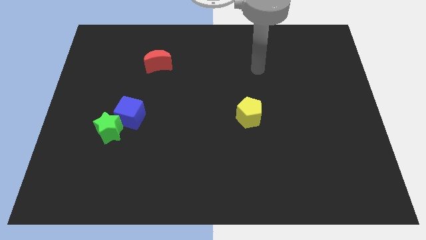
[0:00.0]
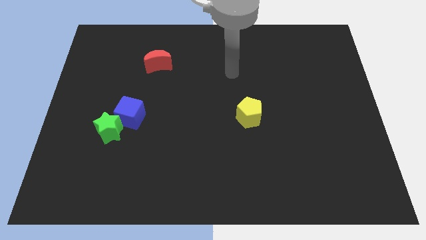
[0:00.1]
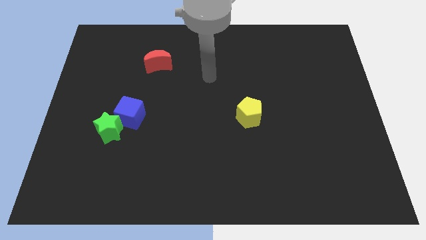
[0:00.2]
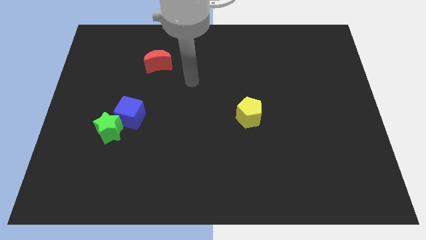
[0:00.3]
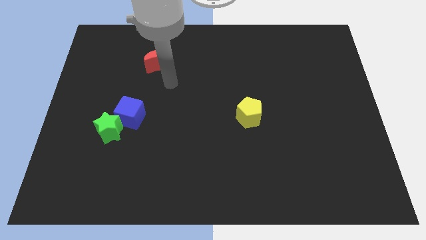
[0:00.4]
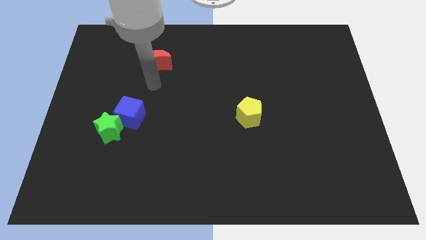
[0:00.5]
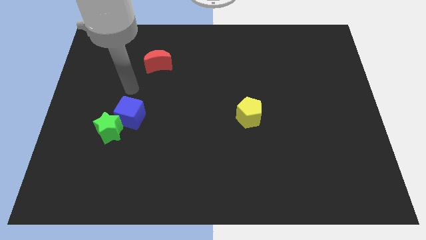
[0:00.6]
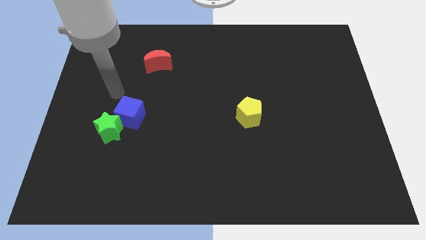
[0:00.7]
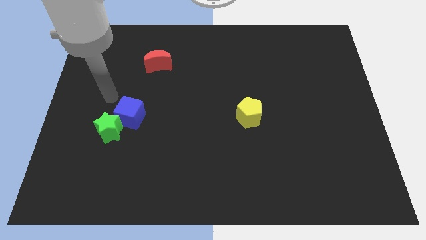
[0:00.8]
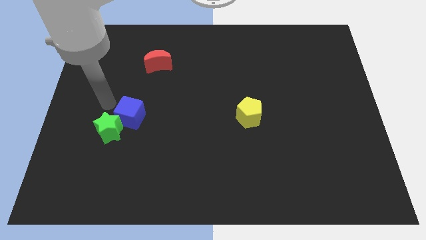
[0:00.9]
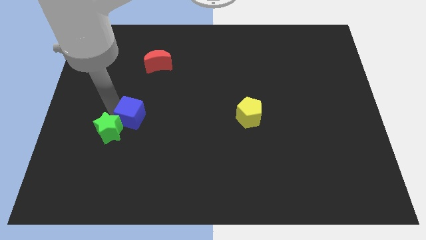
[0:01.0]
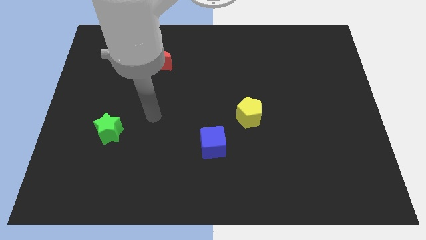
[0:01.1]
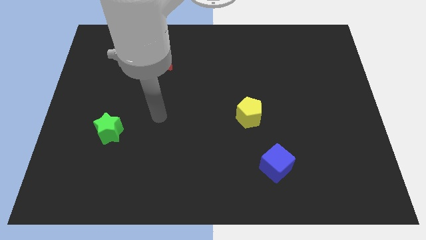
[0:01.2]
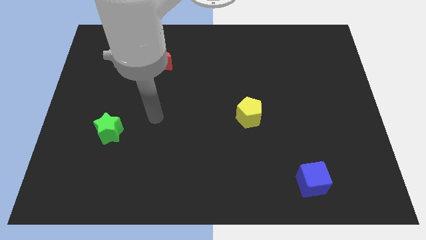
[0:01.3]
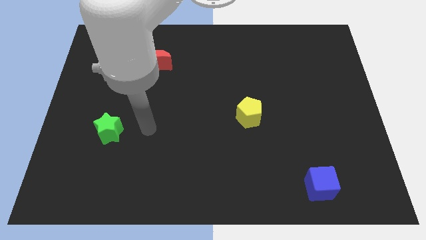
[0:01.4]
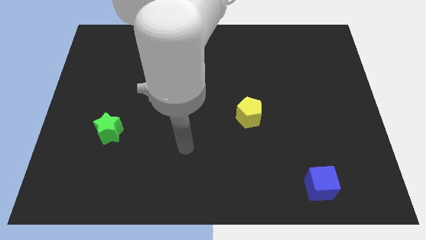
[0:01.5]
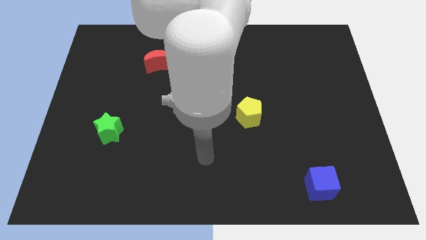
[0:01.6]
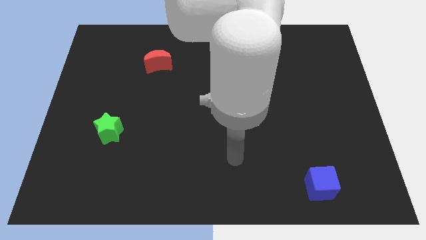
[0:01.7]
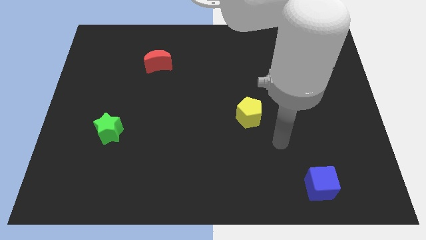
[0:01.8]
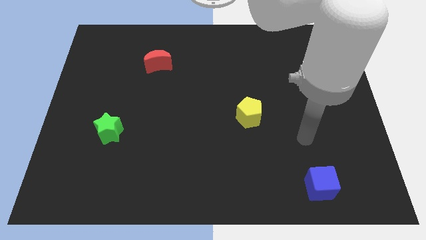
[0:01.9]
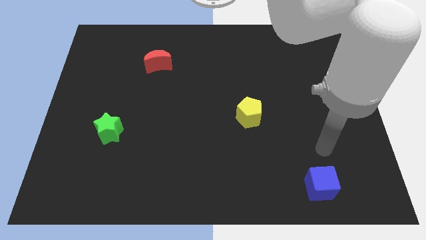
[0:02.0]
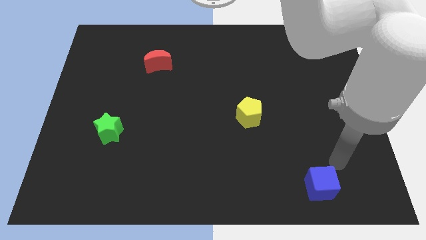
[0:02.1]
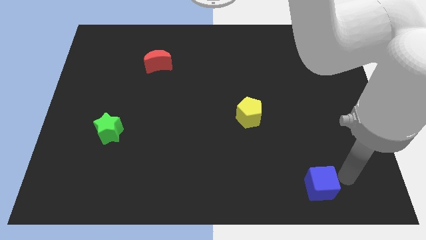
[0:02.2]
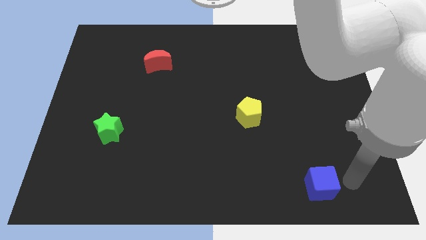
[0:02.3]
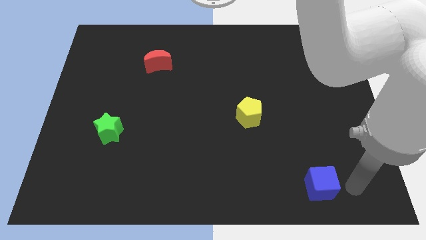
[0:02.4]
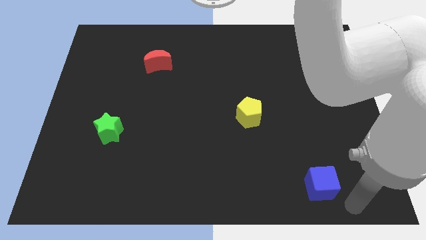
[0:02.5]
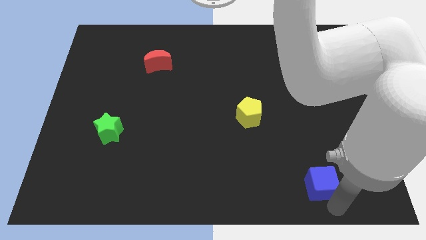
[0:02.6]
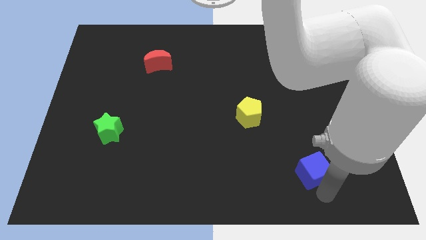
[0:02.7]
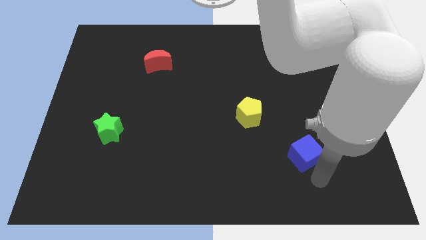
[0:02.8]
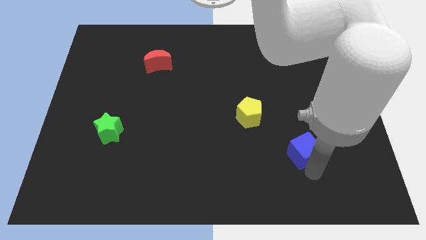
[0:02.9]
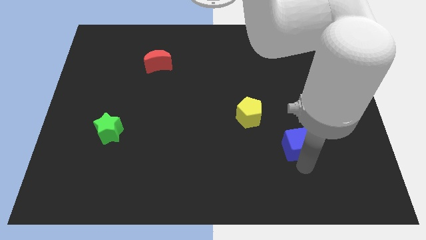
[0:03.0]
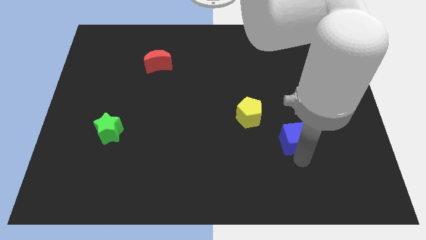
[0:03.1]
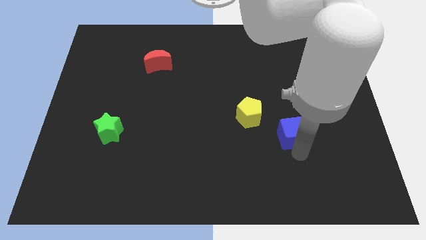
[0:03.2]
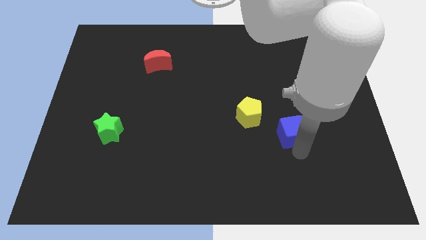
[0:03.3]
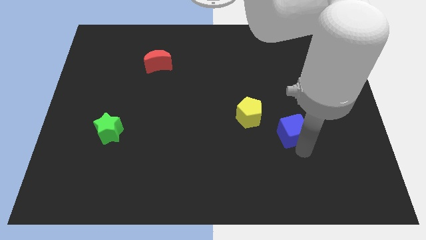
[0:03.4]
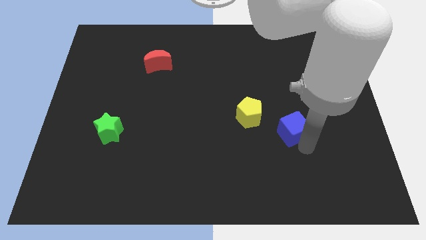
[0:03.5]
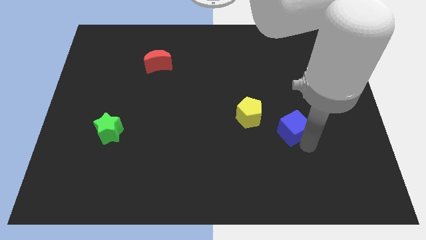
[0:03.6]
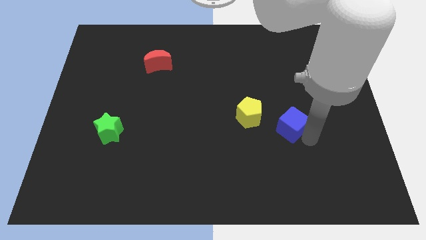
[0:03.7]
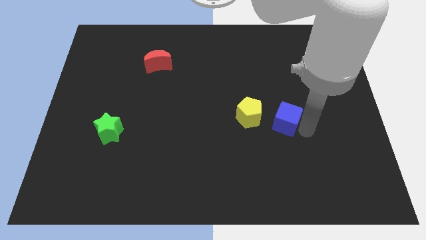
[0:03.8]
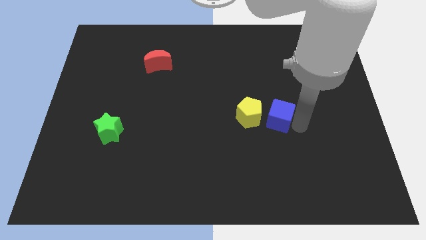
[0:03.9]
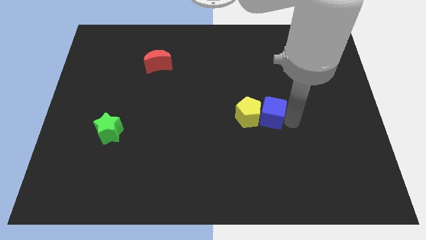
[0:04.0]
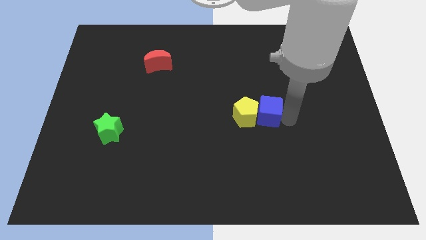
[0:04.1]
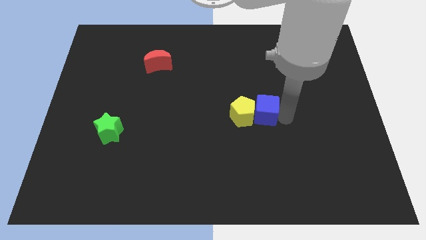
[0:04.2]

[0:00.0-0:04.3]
push the blue cube close to the yellow block

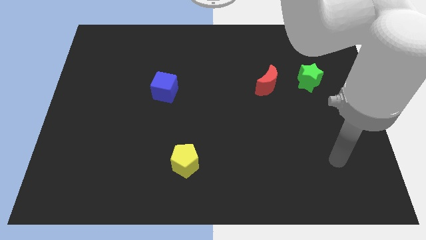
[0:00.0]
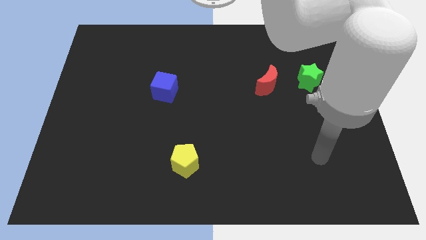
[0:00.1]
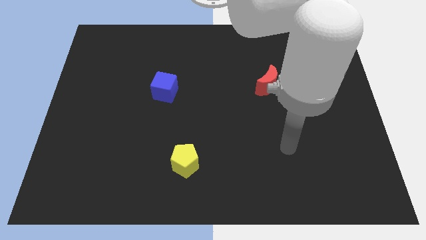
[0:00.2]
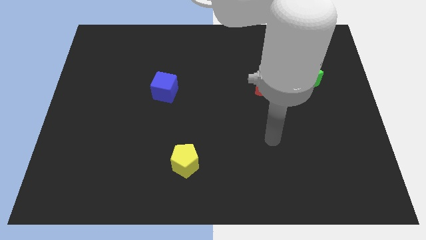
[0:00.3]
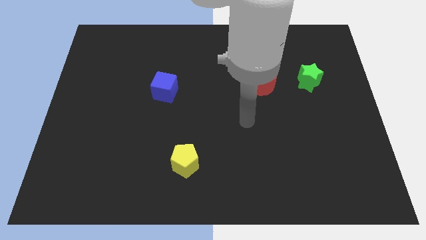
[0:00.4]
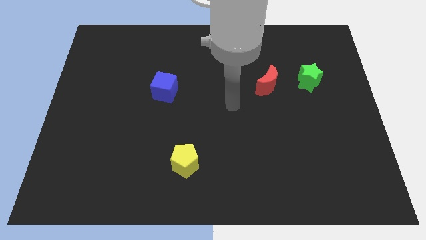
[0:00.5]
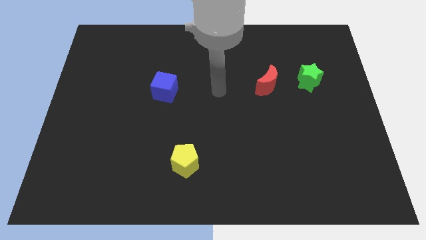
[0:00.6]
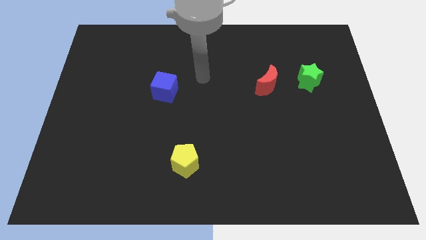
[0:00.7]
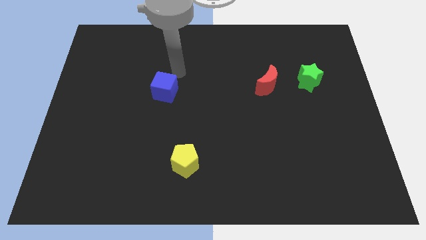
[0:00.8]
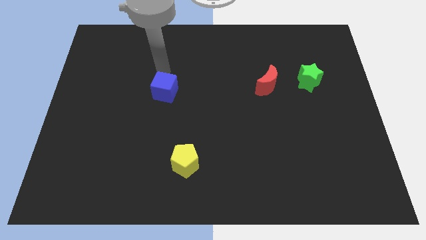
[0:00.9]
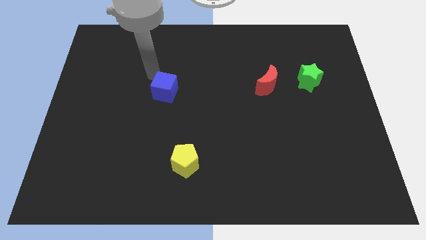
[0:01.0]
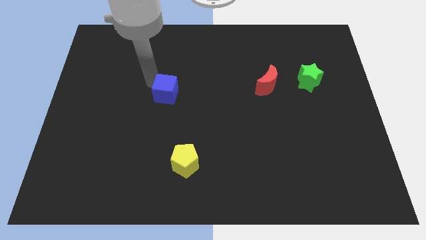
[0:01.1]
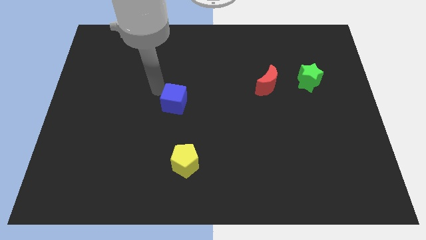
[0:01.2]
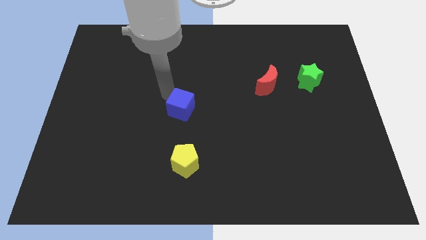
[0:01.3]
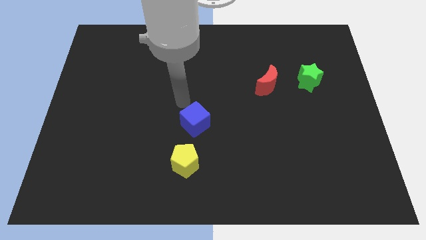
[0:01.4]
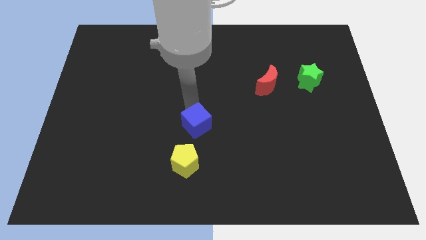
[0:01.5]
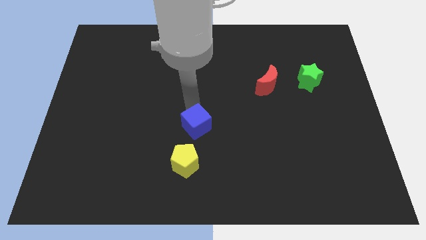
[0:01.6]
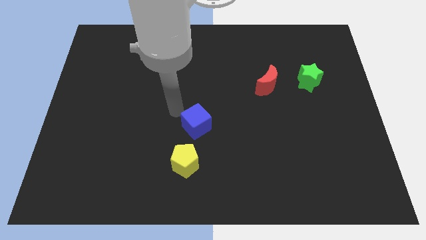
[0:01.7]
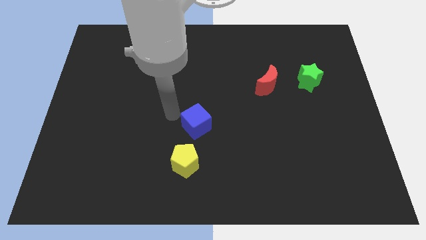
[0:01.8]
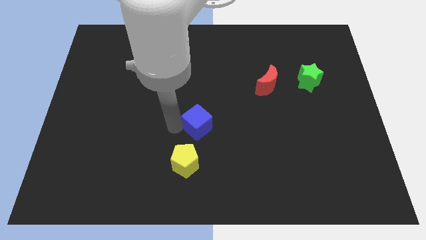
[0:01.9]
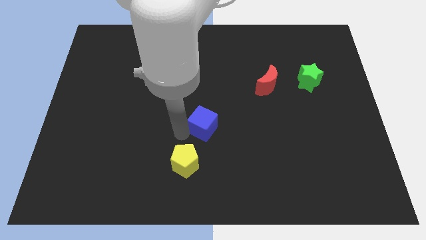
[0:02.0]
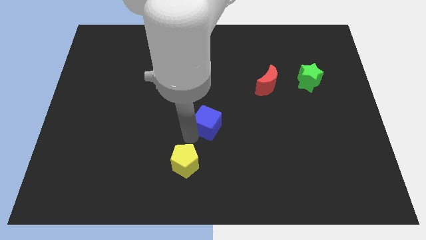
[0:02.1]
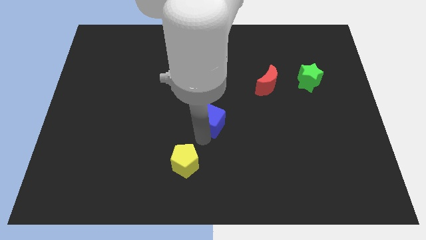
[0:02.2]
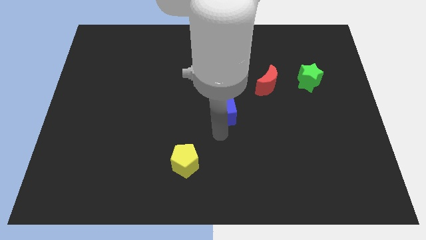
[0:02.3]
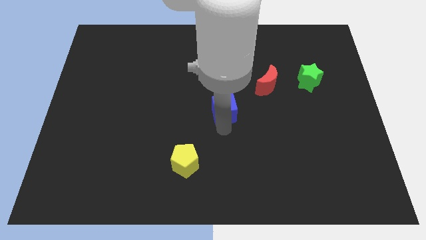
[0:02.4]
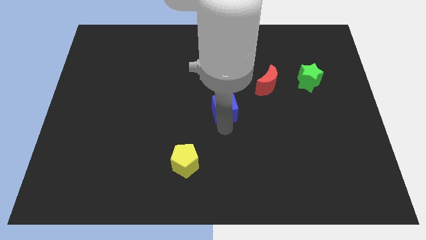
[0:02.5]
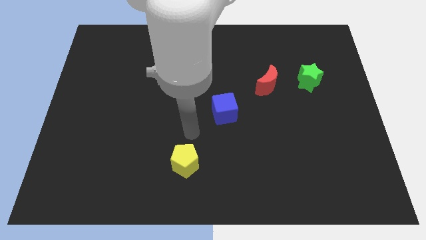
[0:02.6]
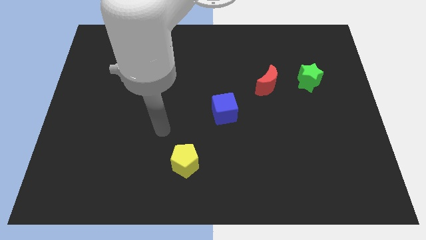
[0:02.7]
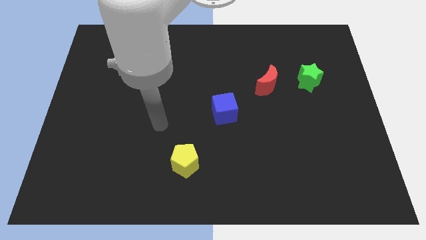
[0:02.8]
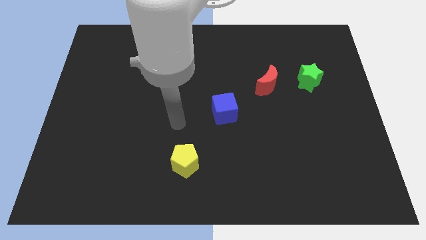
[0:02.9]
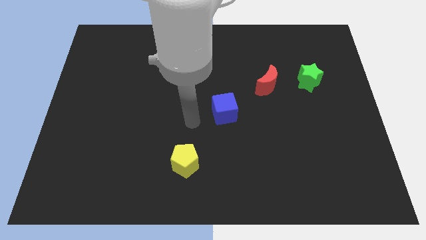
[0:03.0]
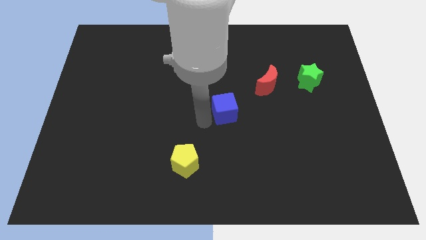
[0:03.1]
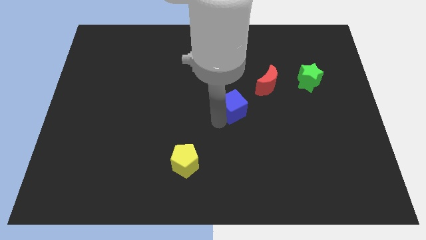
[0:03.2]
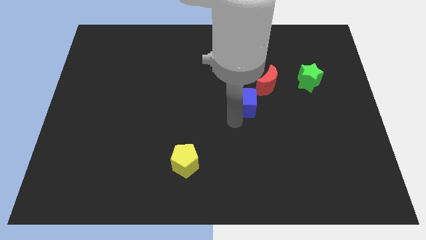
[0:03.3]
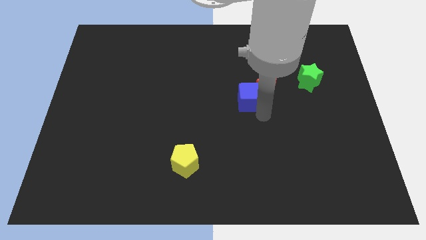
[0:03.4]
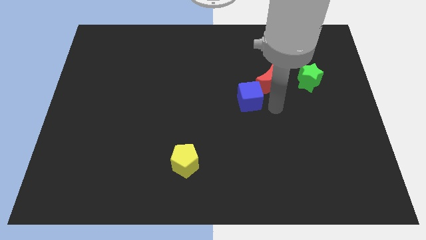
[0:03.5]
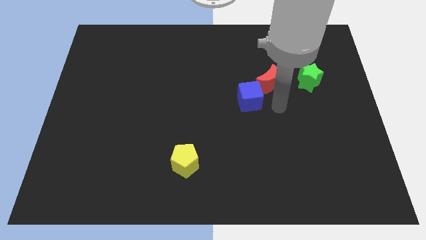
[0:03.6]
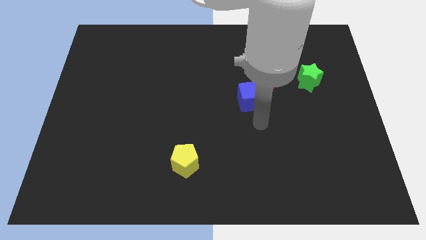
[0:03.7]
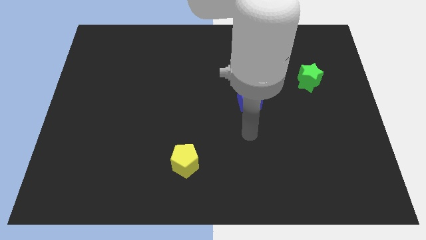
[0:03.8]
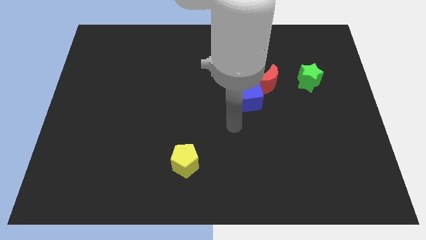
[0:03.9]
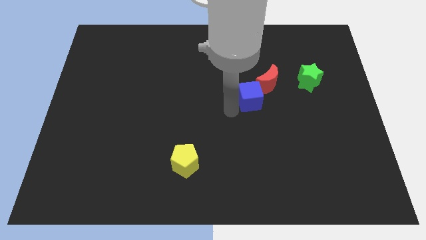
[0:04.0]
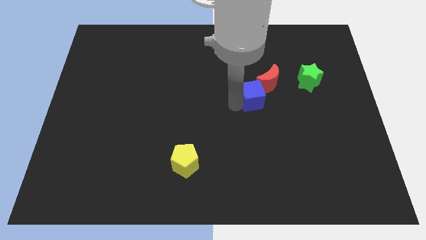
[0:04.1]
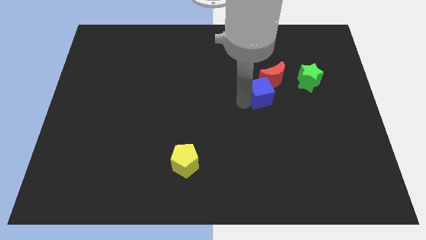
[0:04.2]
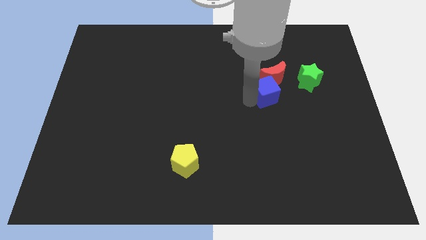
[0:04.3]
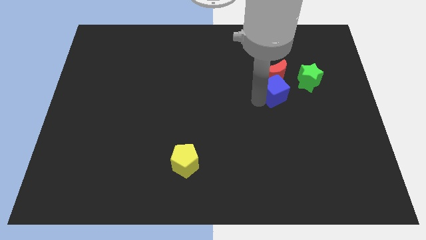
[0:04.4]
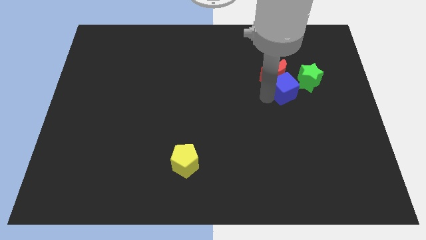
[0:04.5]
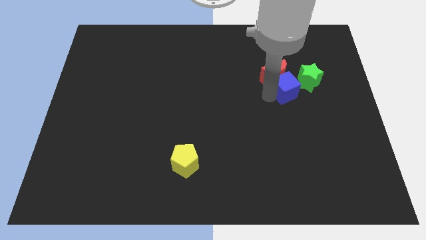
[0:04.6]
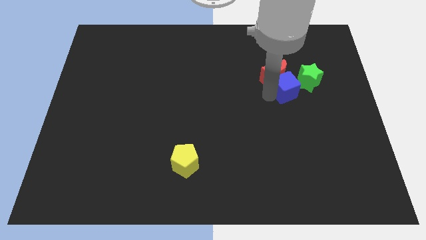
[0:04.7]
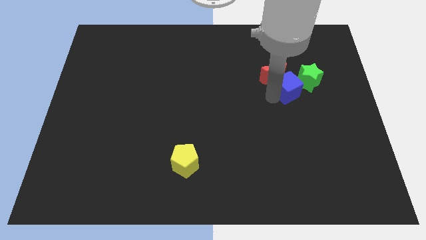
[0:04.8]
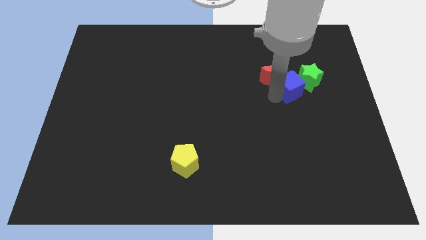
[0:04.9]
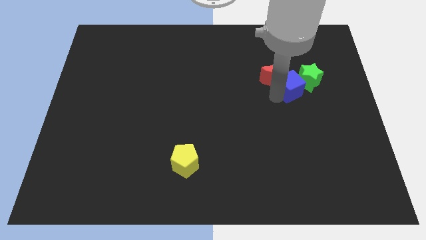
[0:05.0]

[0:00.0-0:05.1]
put the blue cube towards the green star
